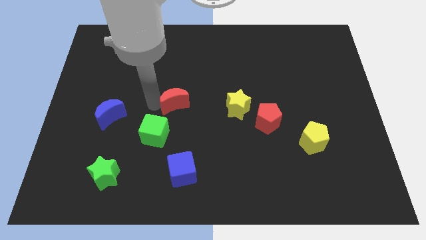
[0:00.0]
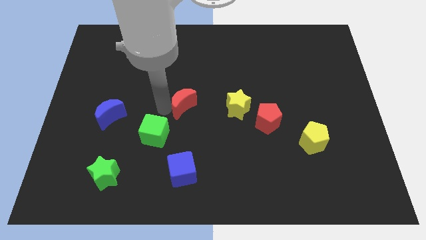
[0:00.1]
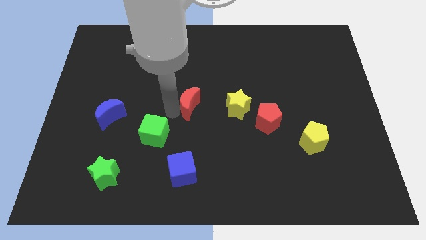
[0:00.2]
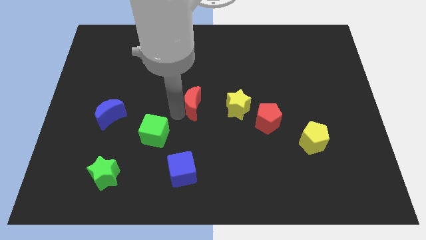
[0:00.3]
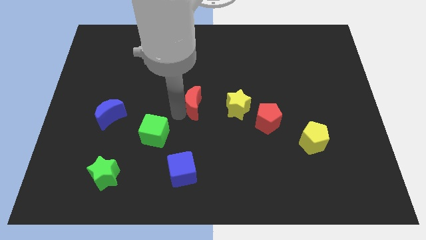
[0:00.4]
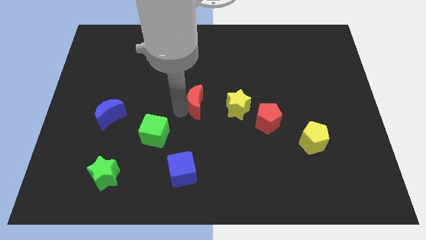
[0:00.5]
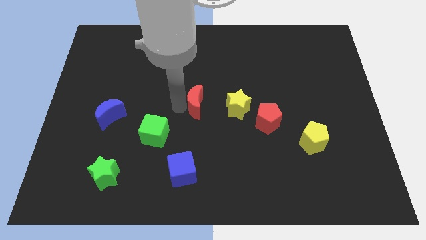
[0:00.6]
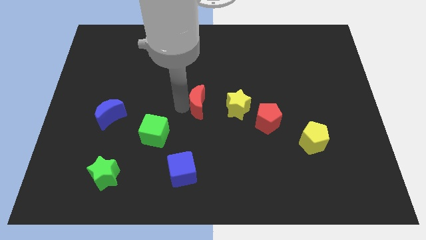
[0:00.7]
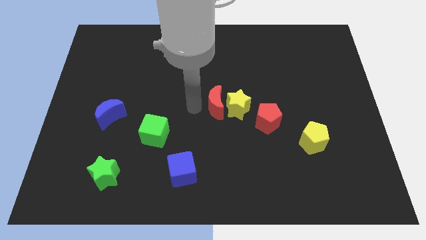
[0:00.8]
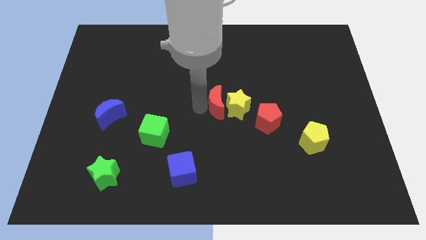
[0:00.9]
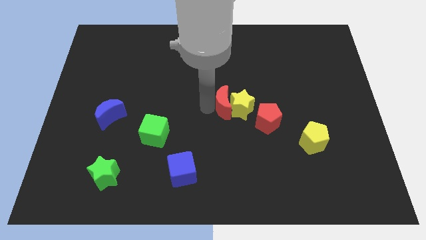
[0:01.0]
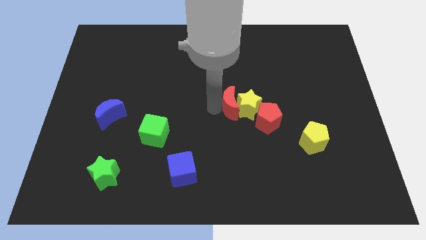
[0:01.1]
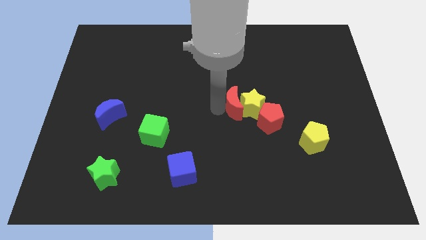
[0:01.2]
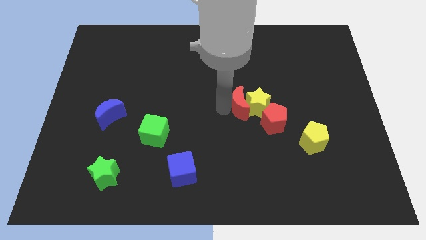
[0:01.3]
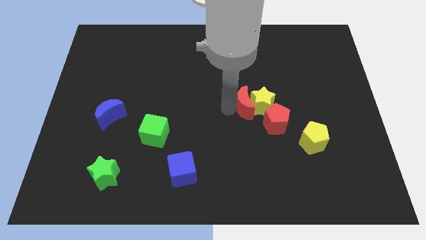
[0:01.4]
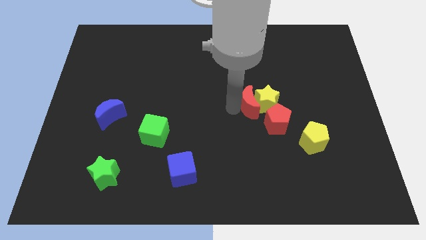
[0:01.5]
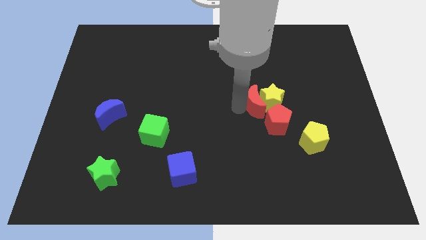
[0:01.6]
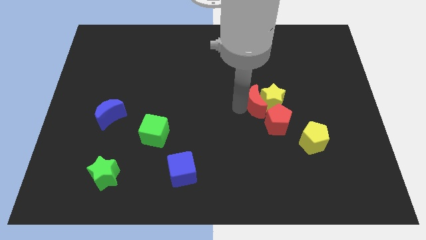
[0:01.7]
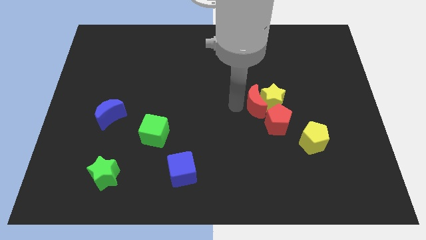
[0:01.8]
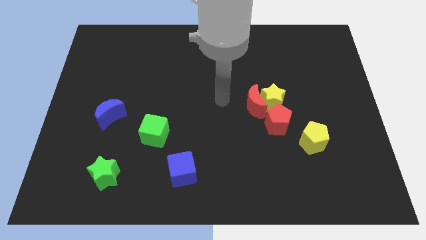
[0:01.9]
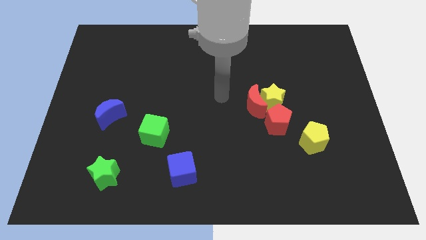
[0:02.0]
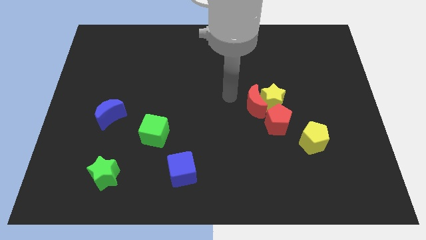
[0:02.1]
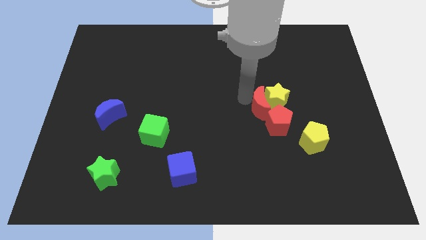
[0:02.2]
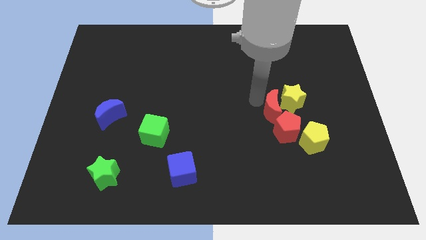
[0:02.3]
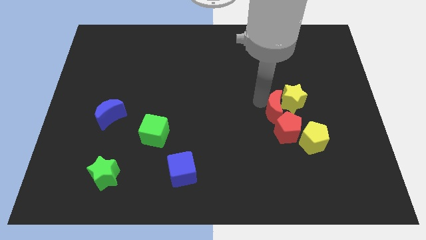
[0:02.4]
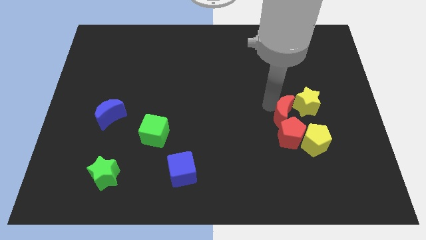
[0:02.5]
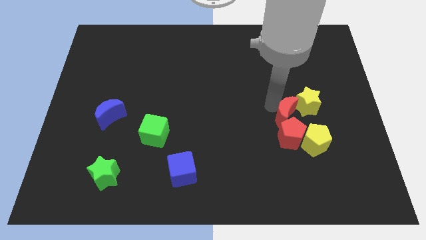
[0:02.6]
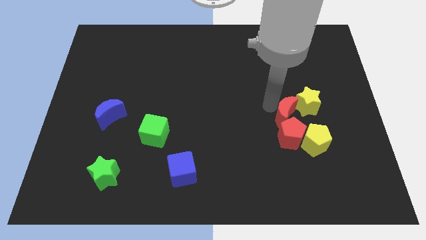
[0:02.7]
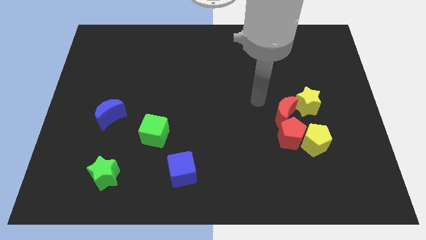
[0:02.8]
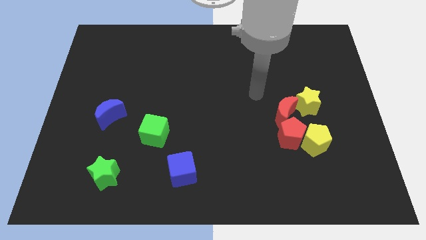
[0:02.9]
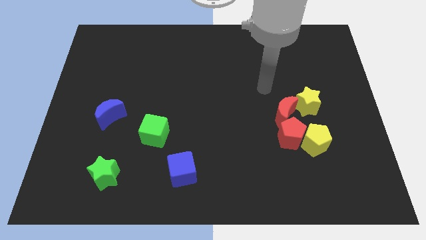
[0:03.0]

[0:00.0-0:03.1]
move the red pentagon with the yellow star

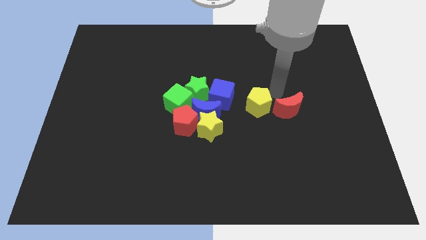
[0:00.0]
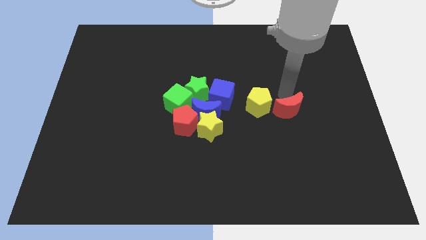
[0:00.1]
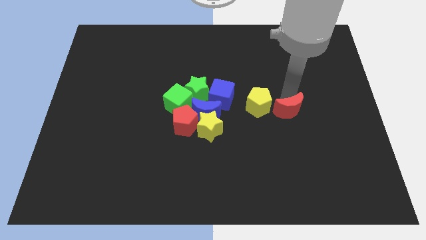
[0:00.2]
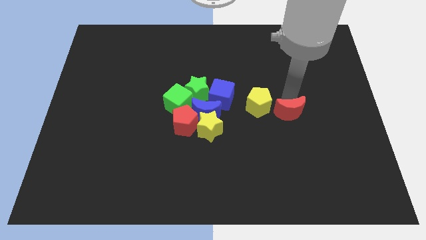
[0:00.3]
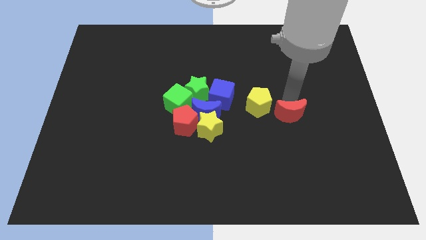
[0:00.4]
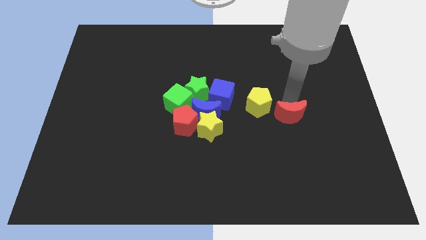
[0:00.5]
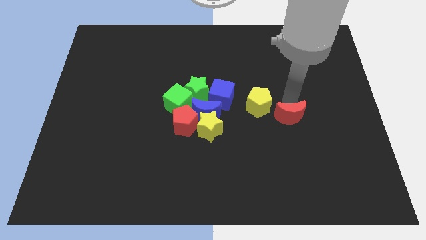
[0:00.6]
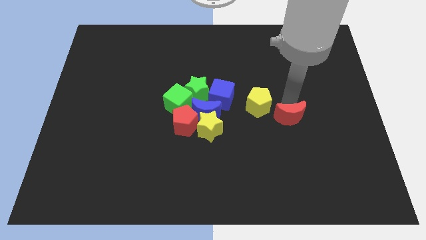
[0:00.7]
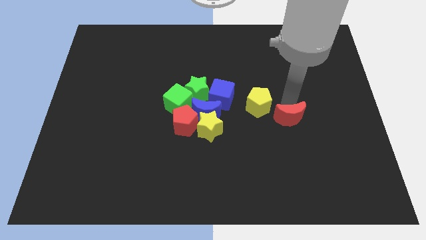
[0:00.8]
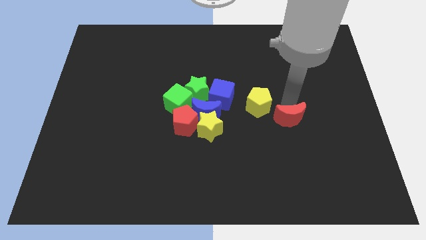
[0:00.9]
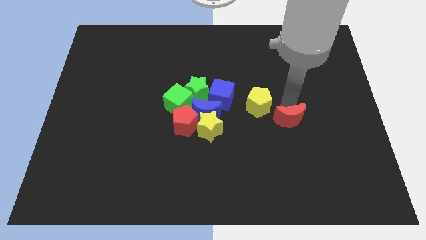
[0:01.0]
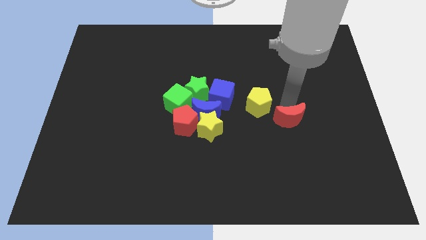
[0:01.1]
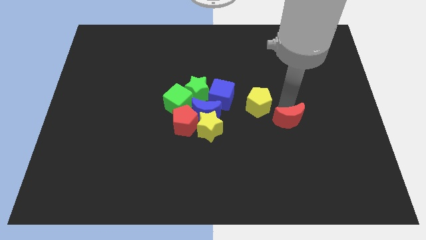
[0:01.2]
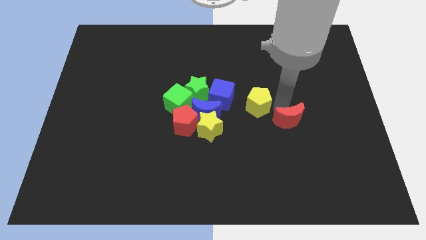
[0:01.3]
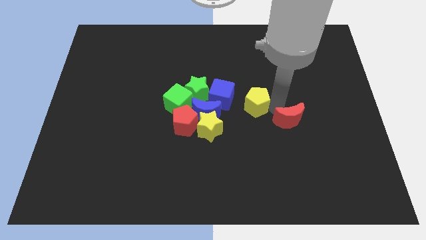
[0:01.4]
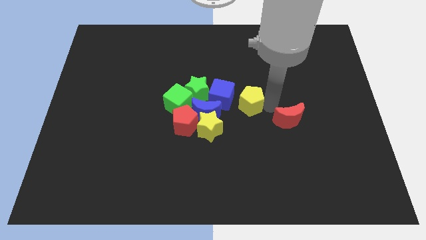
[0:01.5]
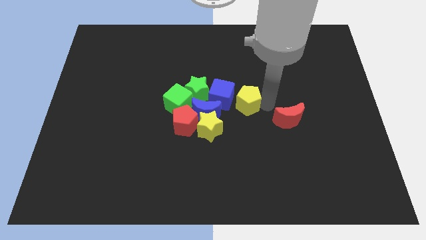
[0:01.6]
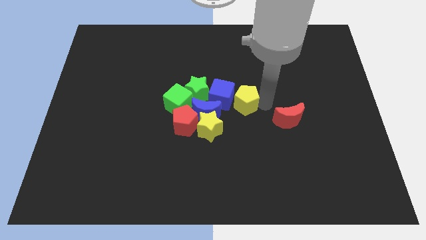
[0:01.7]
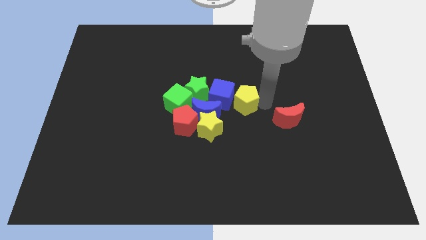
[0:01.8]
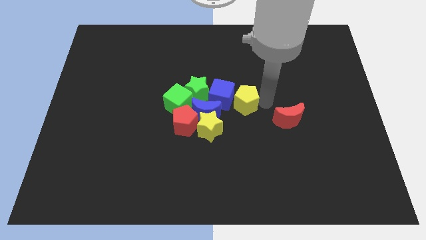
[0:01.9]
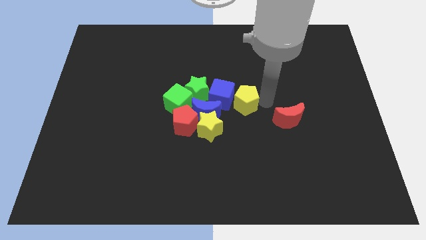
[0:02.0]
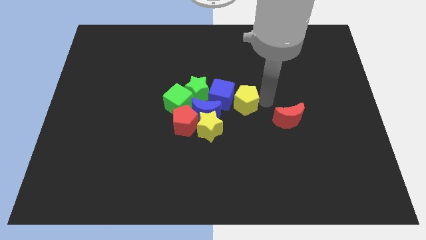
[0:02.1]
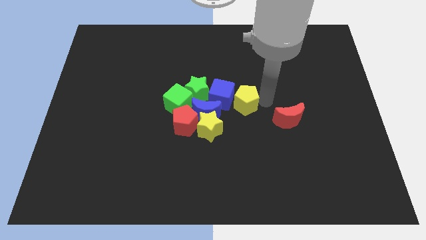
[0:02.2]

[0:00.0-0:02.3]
move the yellow pentagon towards right side of the blue cube

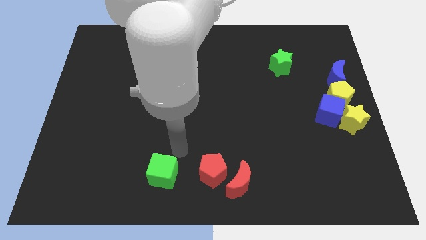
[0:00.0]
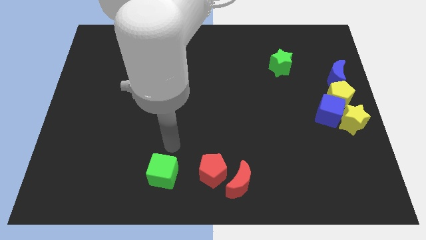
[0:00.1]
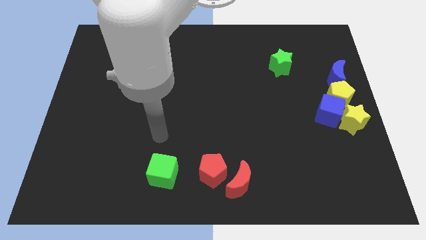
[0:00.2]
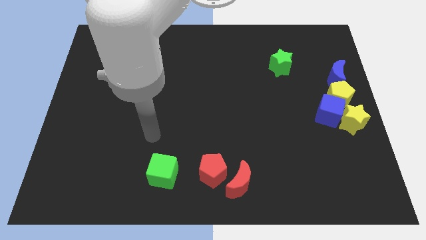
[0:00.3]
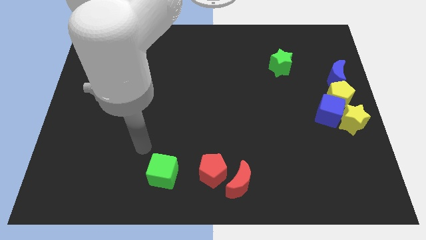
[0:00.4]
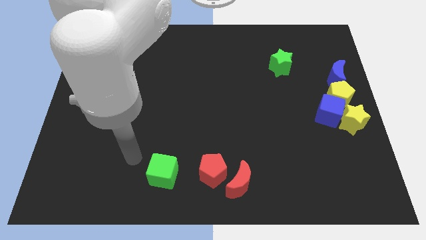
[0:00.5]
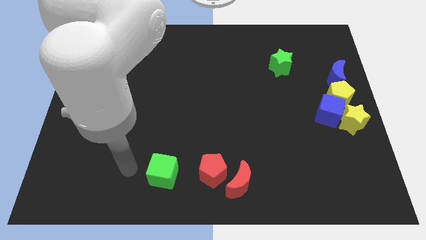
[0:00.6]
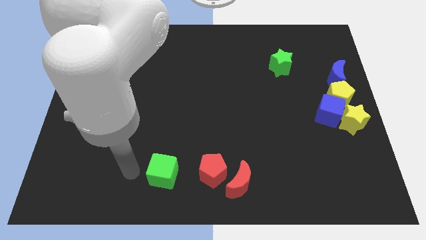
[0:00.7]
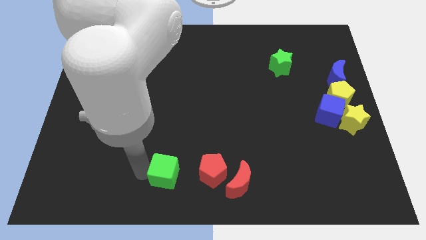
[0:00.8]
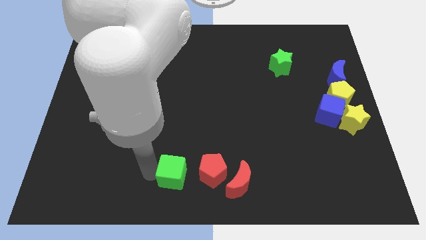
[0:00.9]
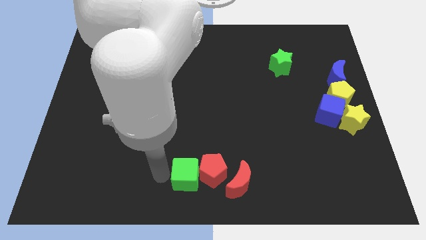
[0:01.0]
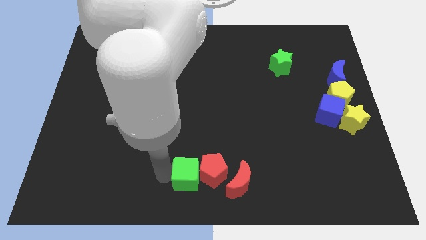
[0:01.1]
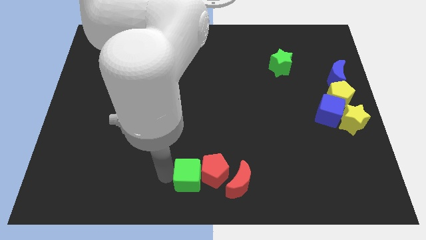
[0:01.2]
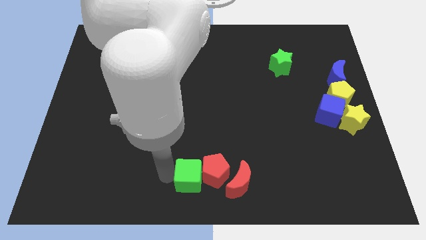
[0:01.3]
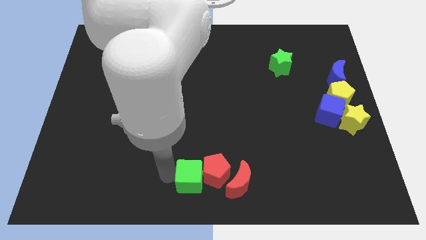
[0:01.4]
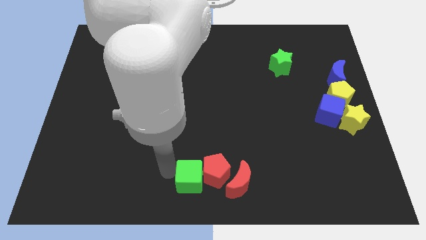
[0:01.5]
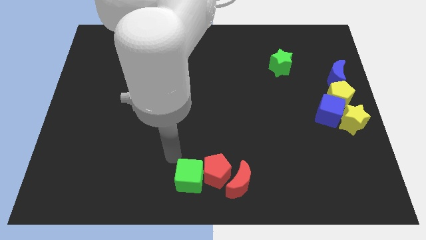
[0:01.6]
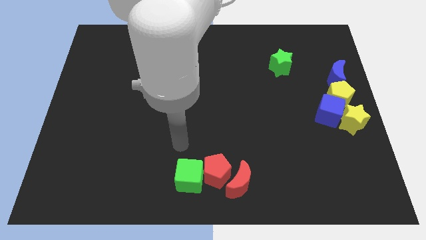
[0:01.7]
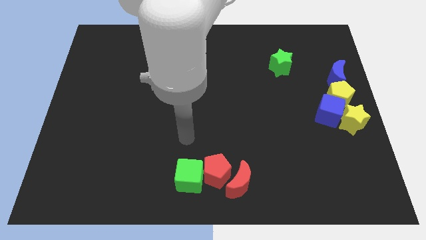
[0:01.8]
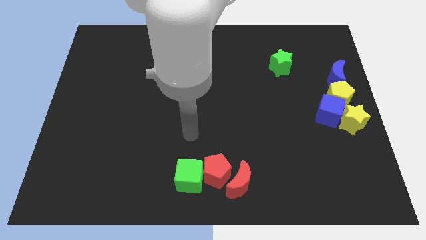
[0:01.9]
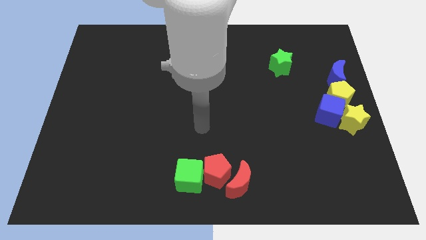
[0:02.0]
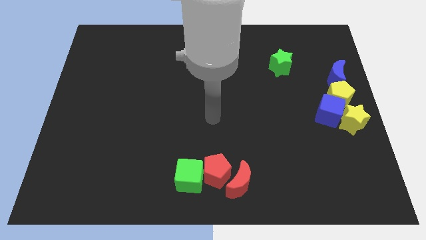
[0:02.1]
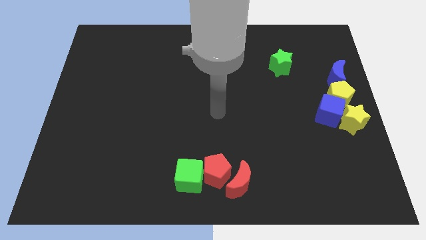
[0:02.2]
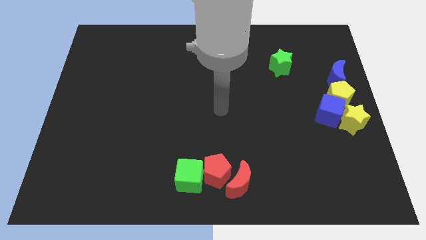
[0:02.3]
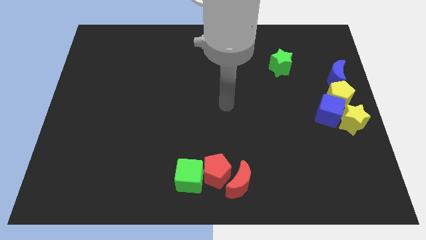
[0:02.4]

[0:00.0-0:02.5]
push the green cube into the left of the red pentagon

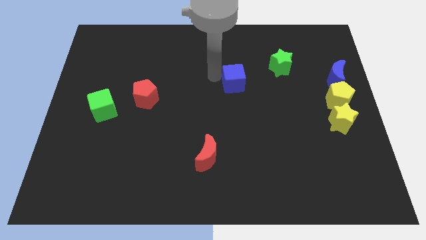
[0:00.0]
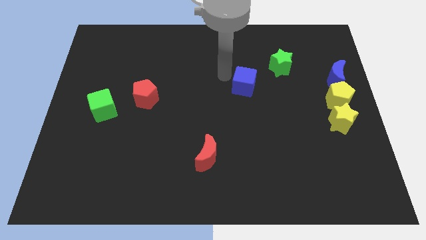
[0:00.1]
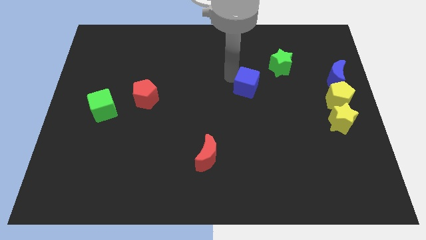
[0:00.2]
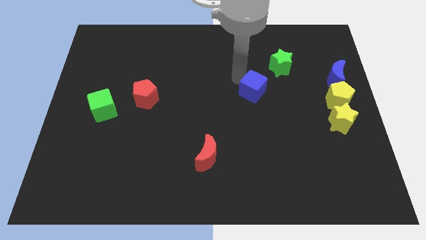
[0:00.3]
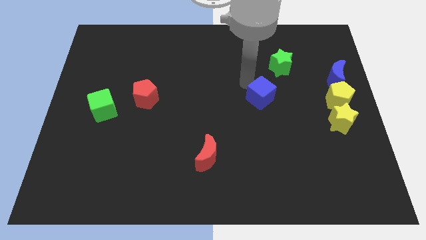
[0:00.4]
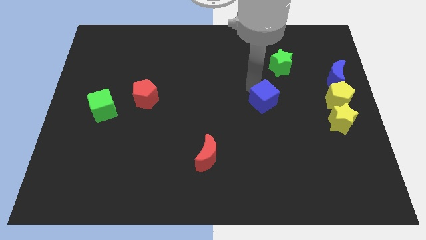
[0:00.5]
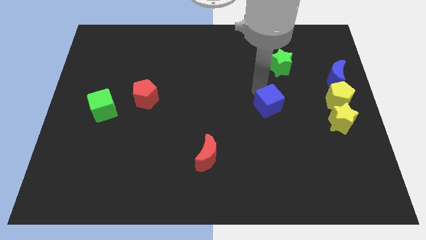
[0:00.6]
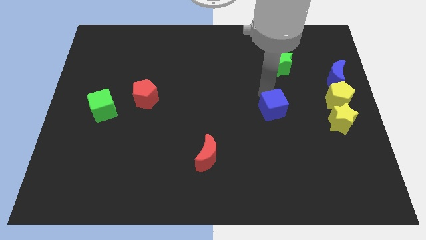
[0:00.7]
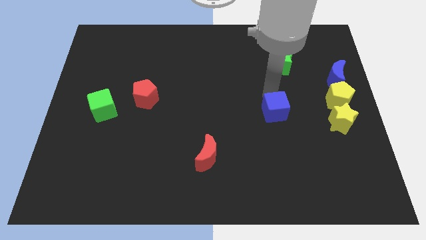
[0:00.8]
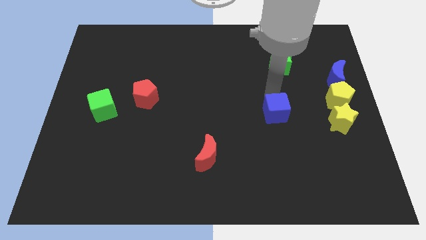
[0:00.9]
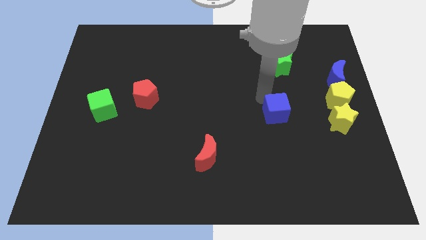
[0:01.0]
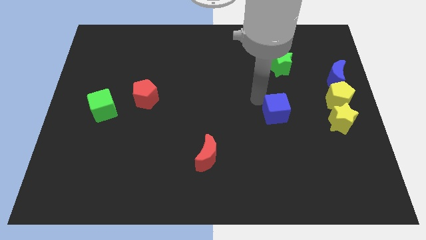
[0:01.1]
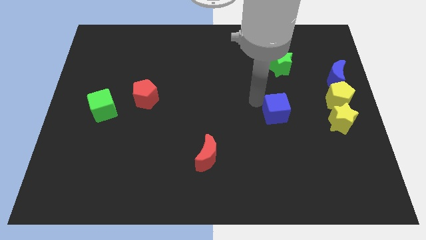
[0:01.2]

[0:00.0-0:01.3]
move the blue cube below to the green star
